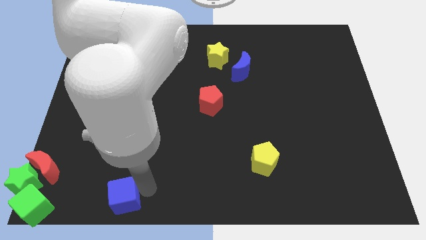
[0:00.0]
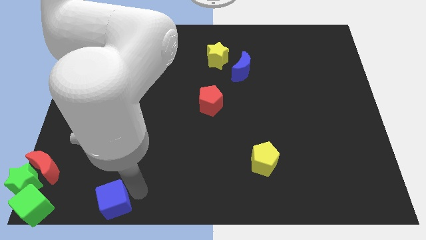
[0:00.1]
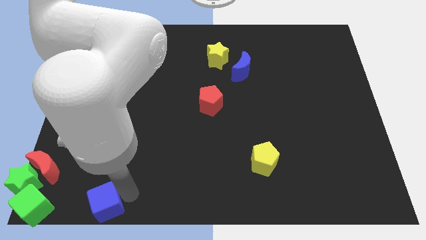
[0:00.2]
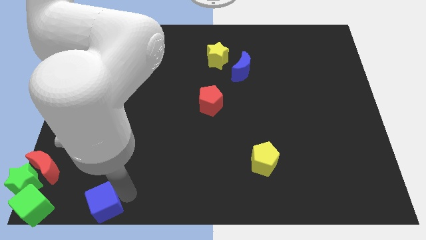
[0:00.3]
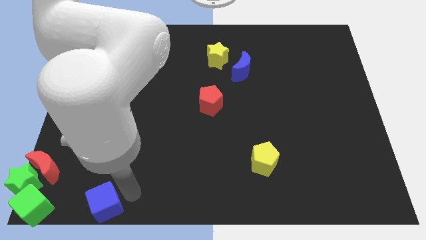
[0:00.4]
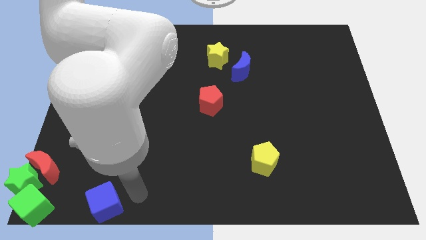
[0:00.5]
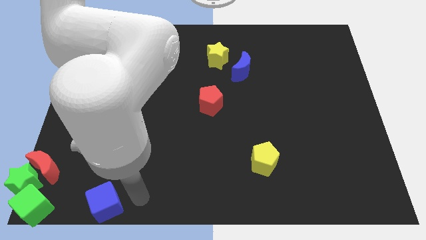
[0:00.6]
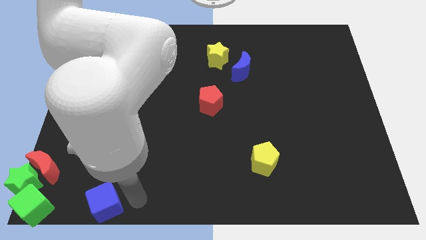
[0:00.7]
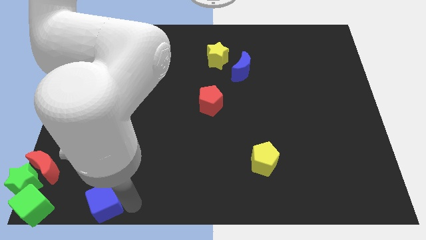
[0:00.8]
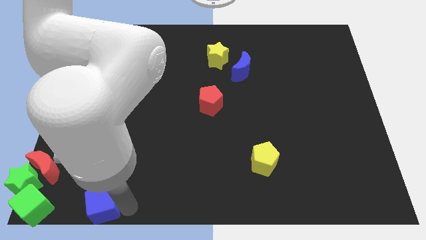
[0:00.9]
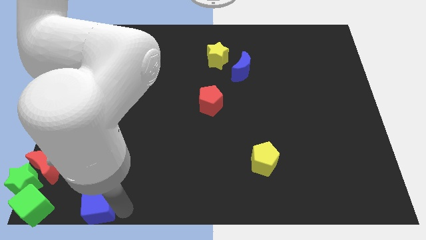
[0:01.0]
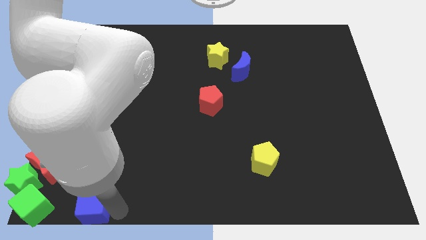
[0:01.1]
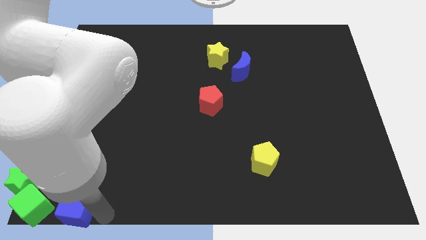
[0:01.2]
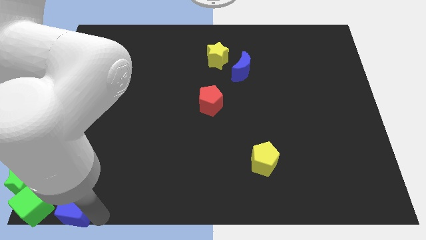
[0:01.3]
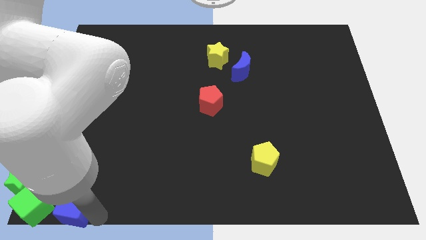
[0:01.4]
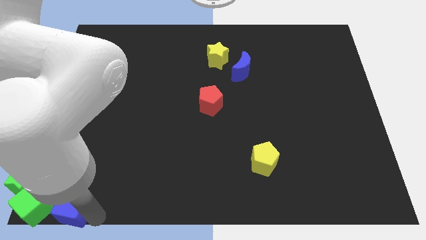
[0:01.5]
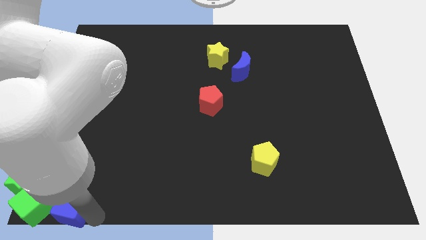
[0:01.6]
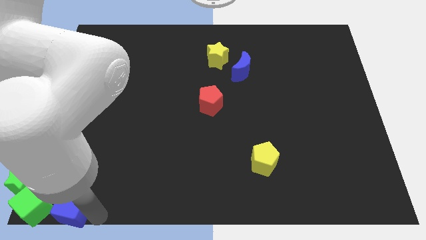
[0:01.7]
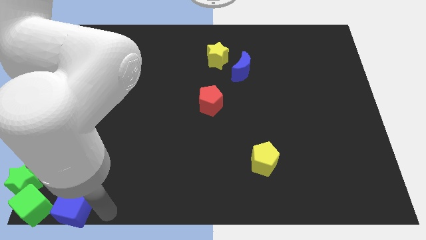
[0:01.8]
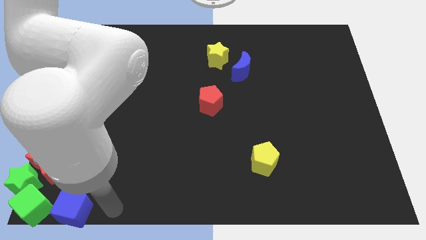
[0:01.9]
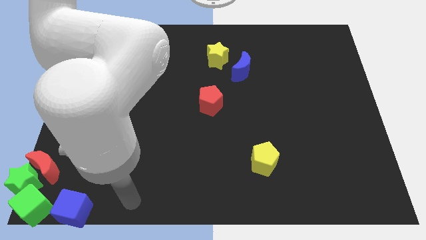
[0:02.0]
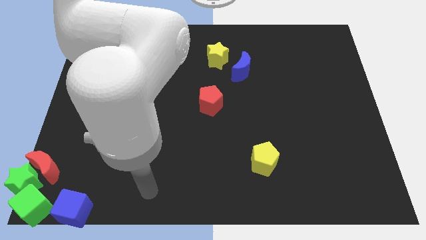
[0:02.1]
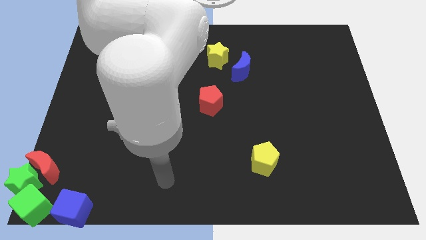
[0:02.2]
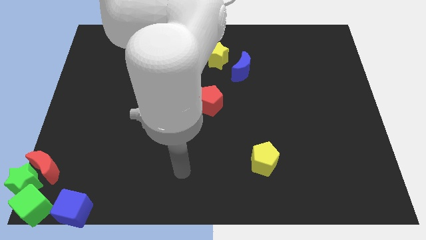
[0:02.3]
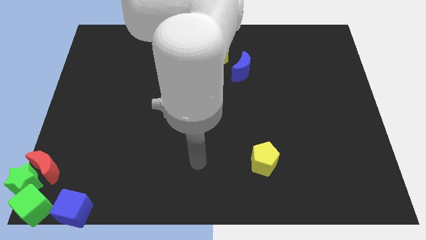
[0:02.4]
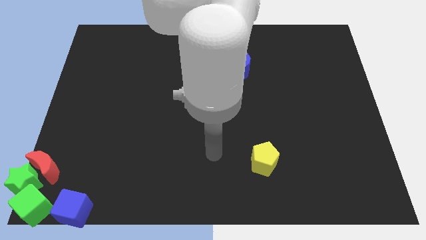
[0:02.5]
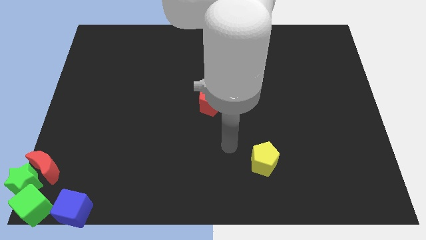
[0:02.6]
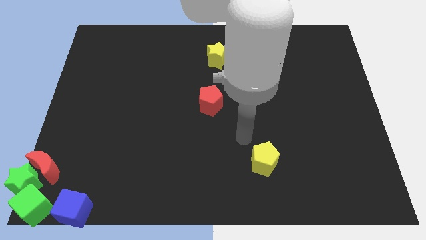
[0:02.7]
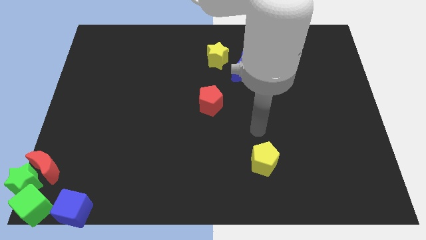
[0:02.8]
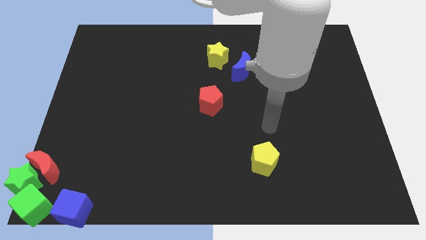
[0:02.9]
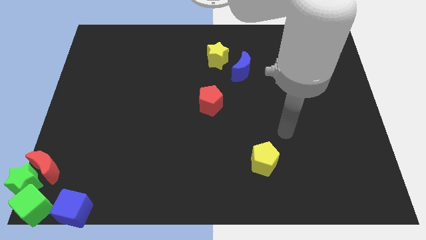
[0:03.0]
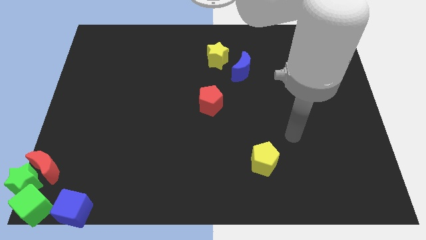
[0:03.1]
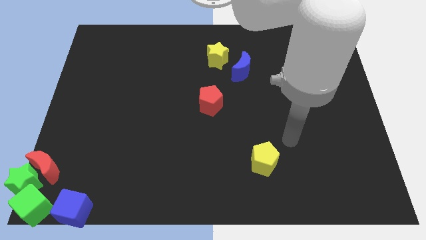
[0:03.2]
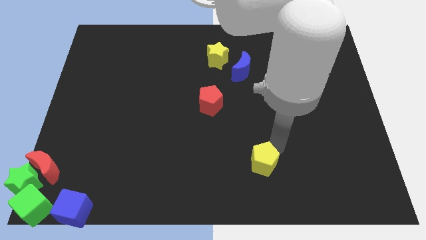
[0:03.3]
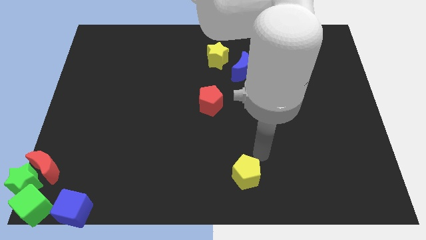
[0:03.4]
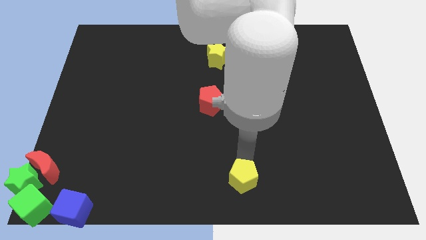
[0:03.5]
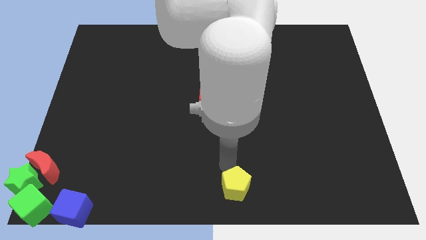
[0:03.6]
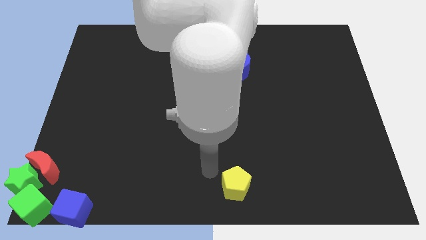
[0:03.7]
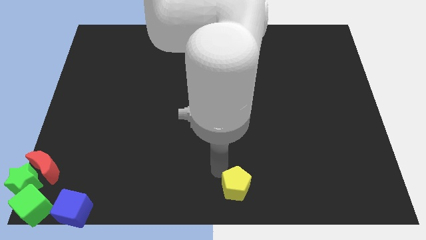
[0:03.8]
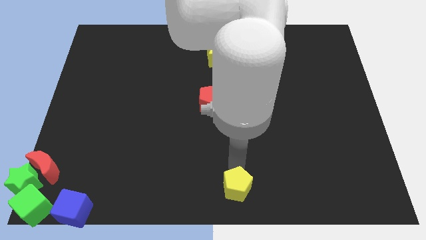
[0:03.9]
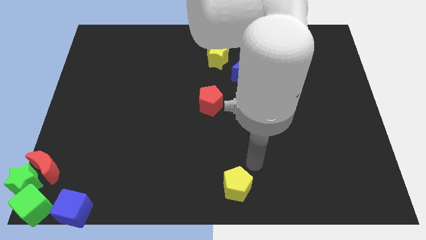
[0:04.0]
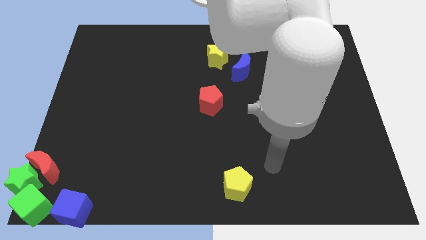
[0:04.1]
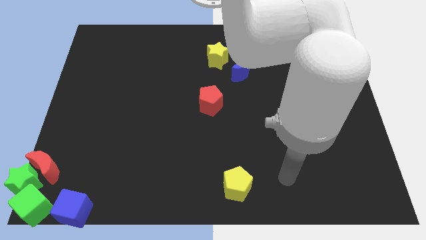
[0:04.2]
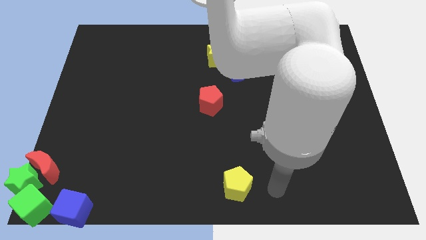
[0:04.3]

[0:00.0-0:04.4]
place the blue cube right to the green cube

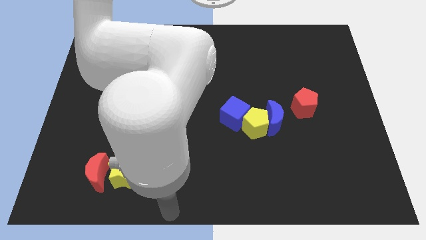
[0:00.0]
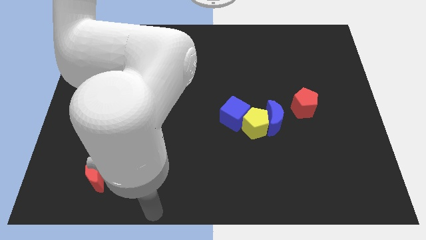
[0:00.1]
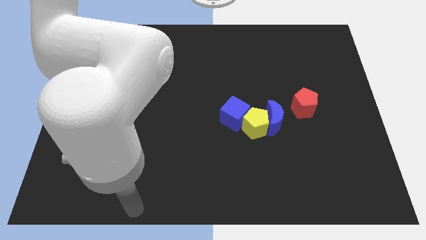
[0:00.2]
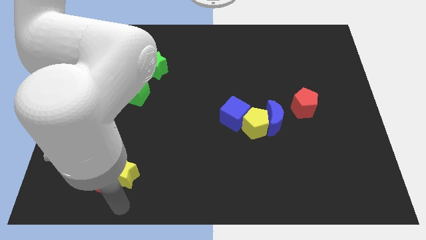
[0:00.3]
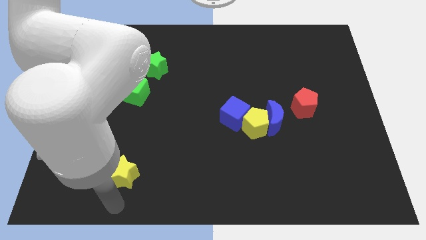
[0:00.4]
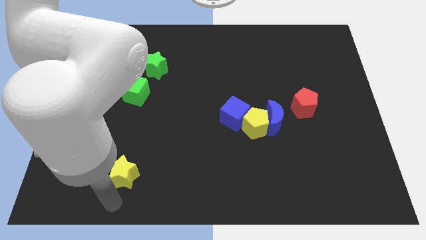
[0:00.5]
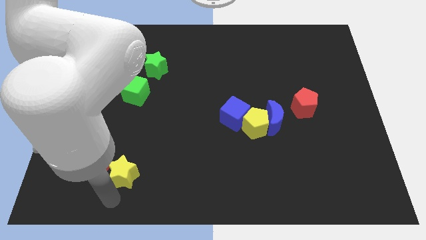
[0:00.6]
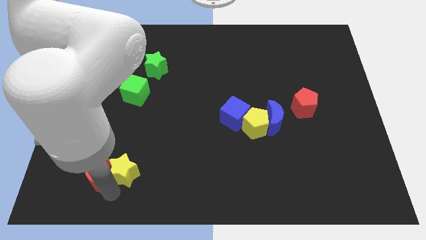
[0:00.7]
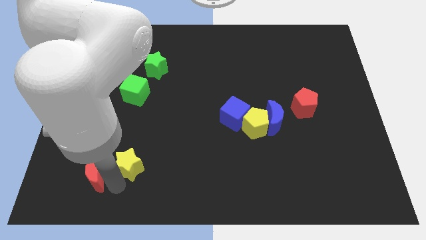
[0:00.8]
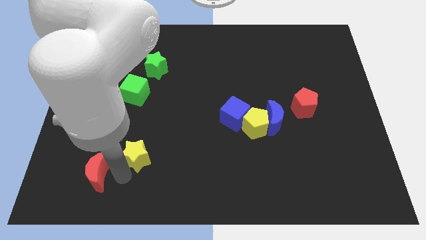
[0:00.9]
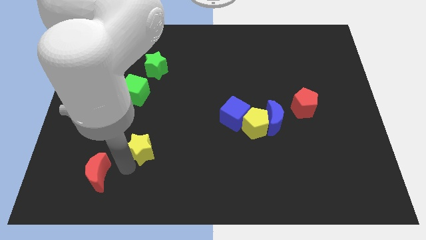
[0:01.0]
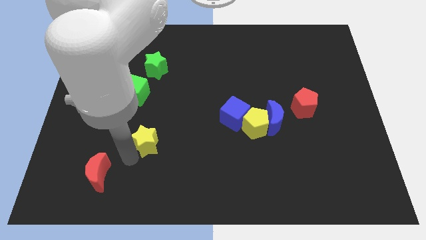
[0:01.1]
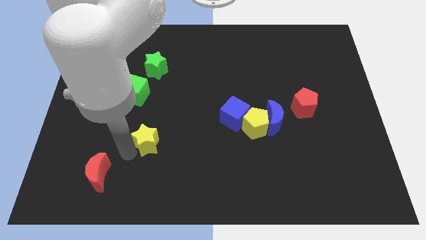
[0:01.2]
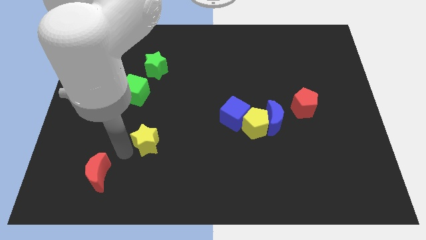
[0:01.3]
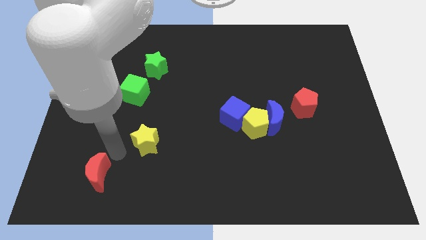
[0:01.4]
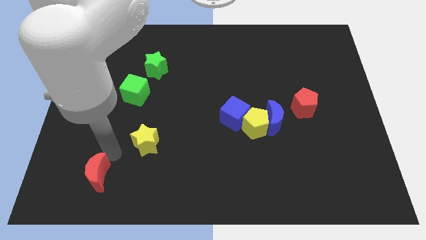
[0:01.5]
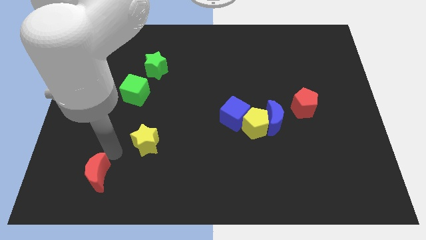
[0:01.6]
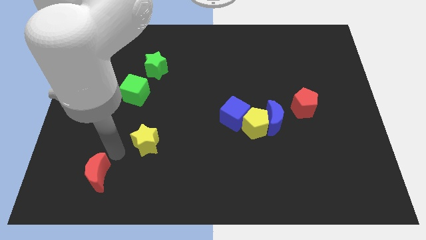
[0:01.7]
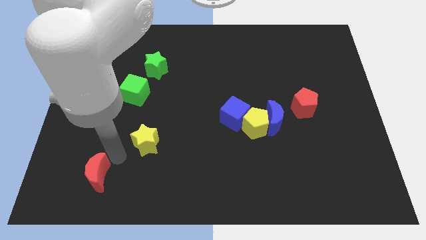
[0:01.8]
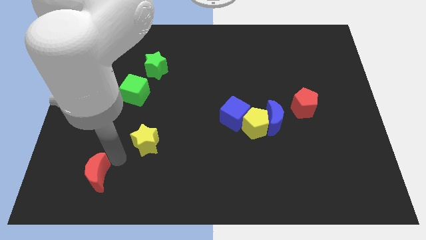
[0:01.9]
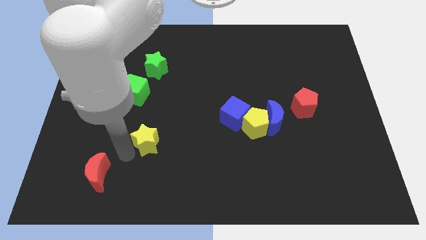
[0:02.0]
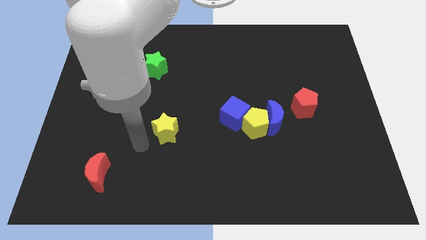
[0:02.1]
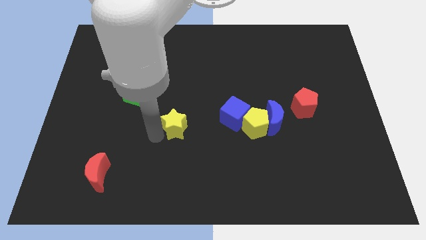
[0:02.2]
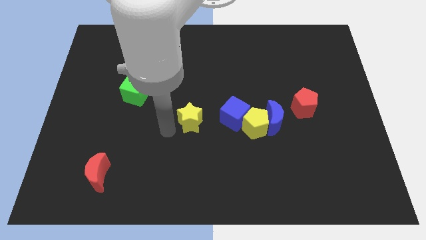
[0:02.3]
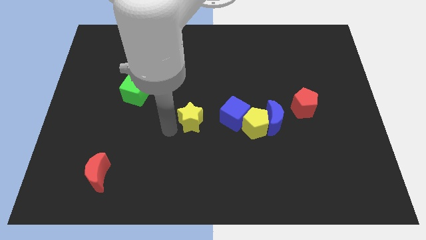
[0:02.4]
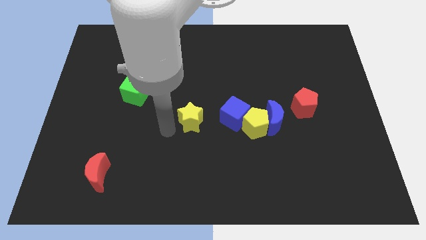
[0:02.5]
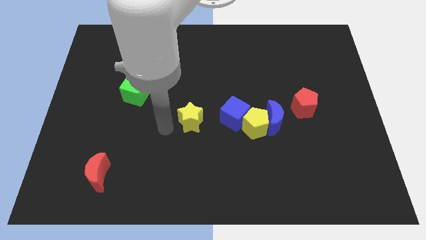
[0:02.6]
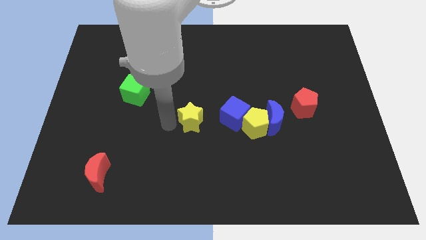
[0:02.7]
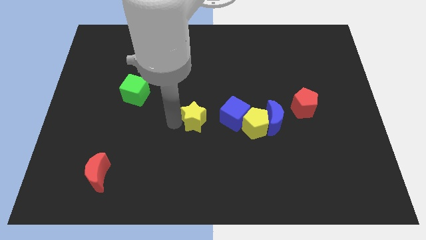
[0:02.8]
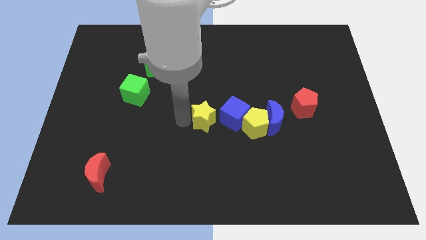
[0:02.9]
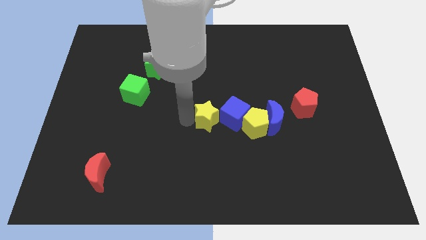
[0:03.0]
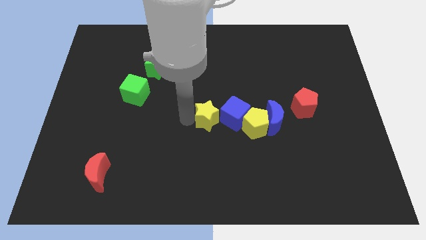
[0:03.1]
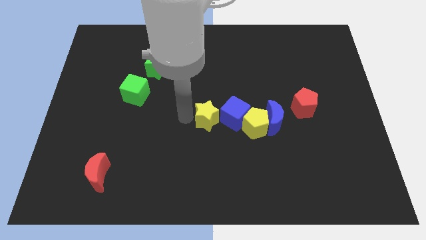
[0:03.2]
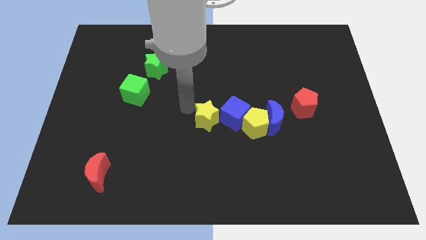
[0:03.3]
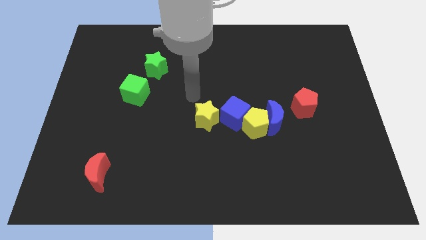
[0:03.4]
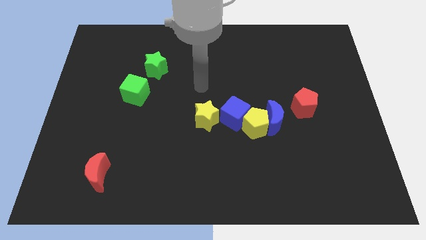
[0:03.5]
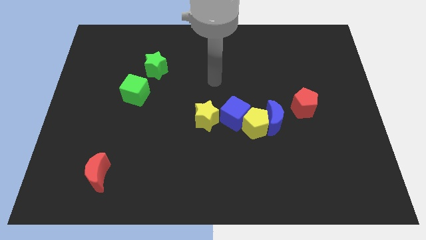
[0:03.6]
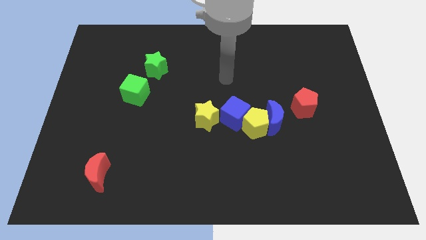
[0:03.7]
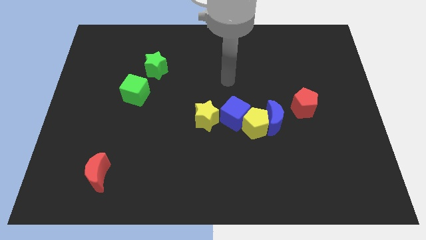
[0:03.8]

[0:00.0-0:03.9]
push the yellow star to the right of the blue cube

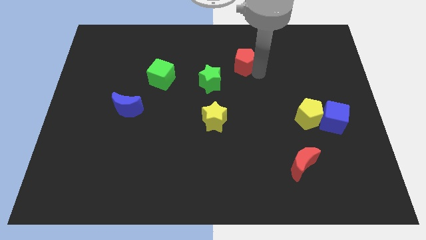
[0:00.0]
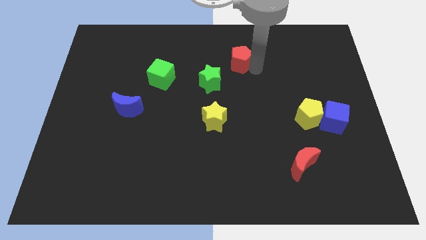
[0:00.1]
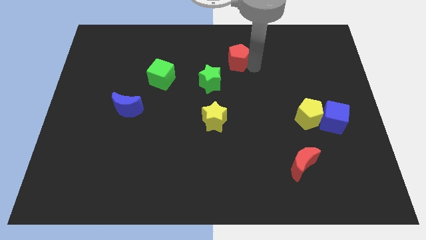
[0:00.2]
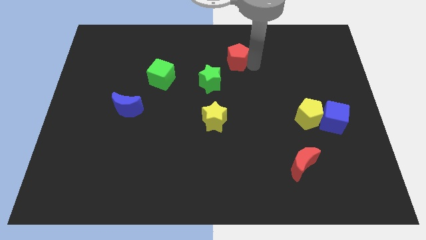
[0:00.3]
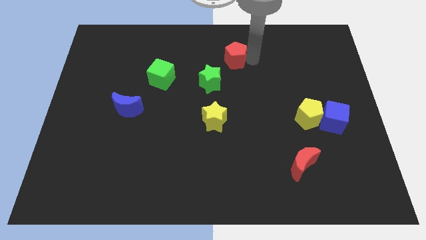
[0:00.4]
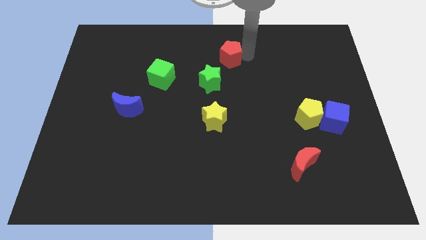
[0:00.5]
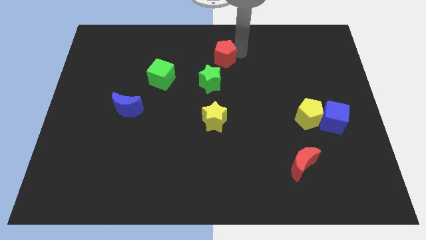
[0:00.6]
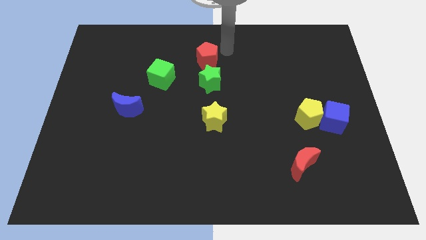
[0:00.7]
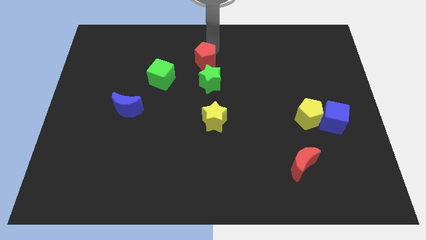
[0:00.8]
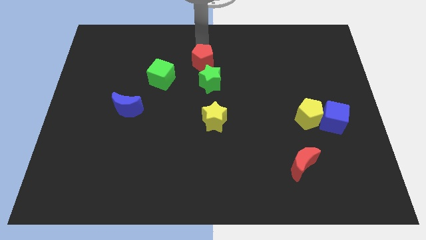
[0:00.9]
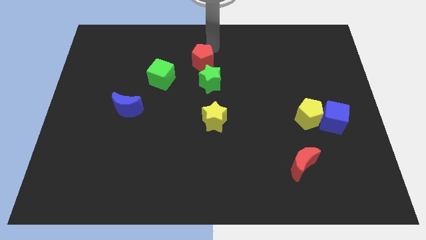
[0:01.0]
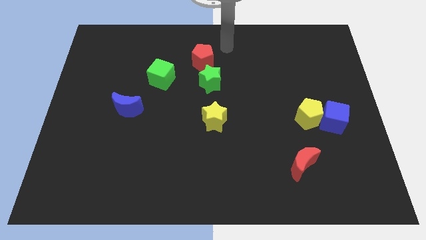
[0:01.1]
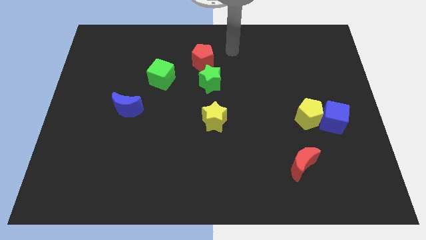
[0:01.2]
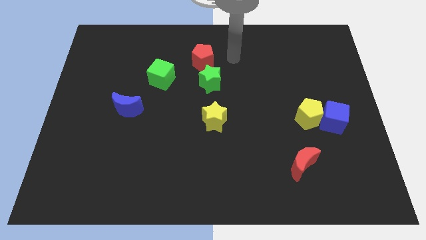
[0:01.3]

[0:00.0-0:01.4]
move the red pentagon diagonally top right to green cube
